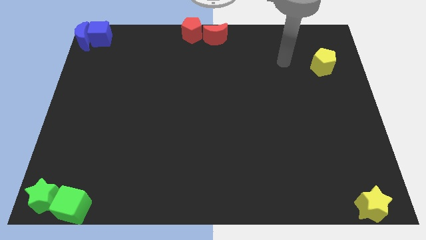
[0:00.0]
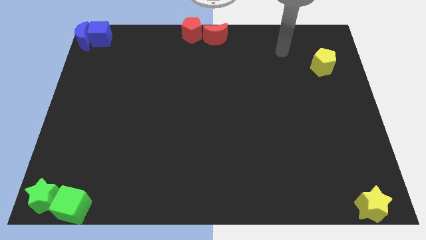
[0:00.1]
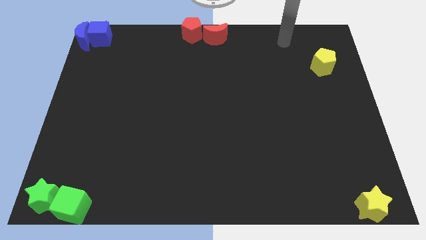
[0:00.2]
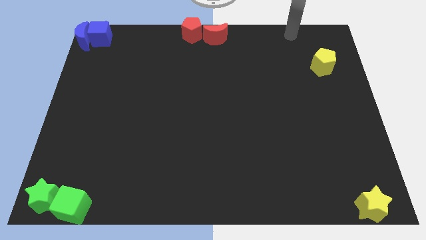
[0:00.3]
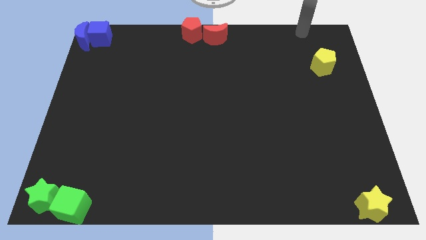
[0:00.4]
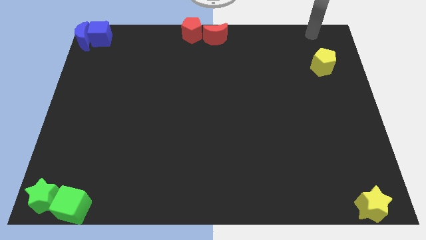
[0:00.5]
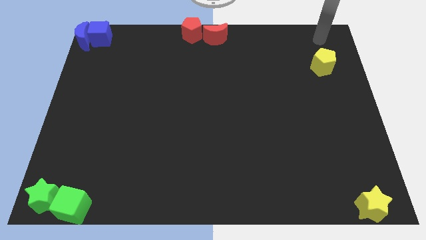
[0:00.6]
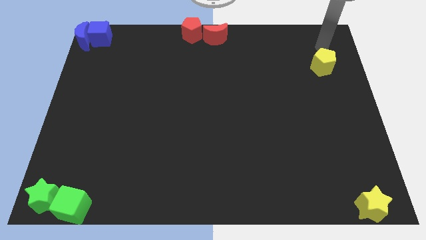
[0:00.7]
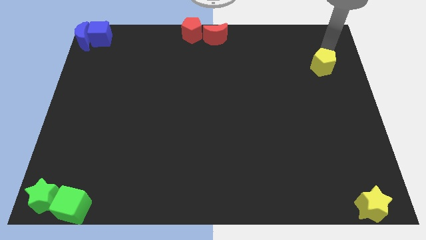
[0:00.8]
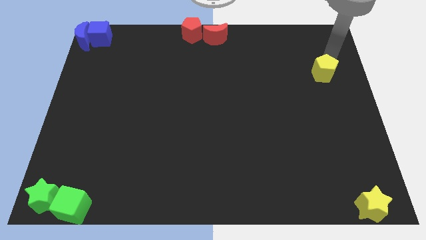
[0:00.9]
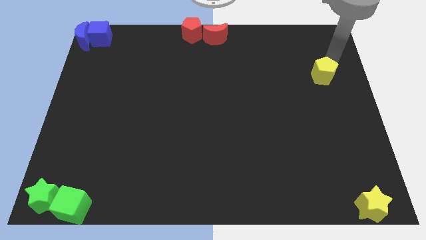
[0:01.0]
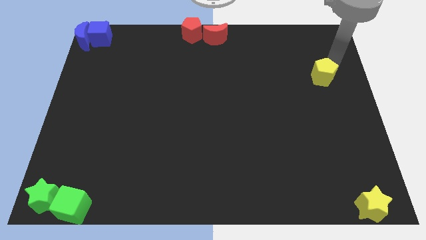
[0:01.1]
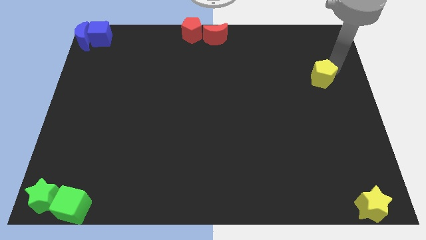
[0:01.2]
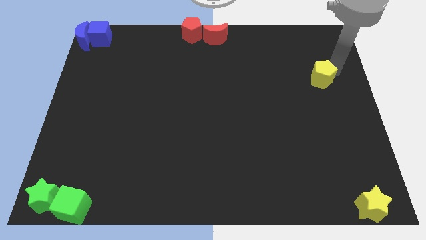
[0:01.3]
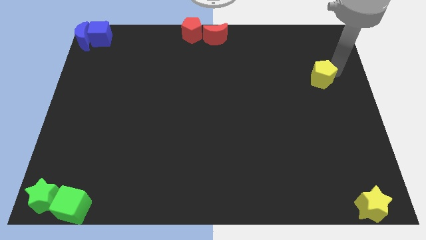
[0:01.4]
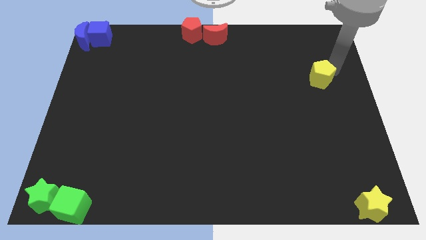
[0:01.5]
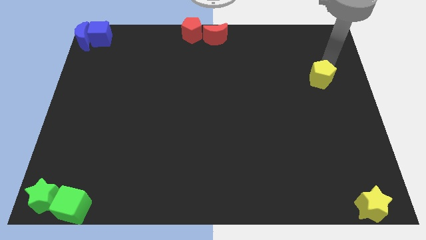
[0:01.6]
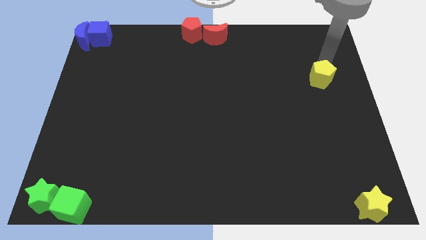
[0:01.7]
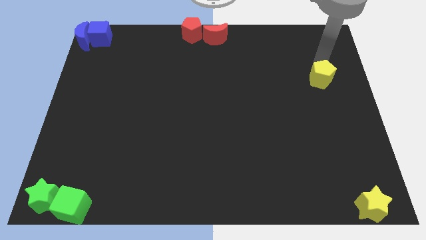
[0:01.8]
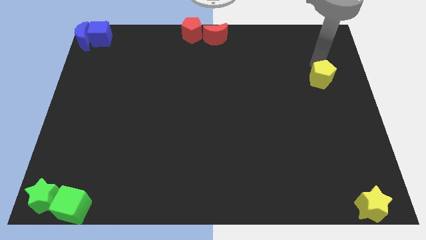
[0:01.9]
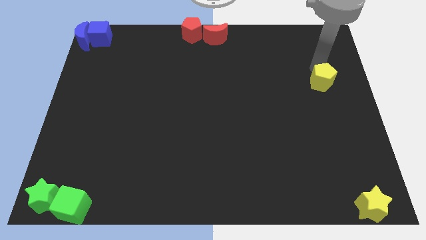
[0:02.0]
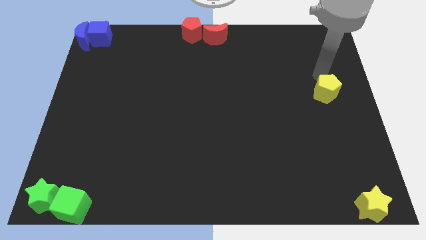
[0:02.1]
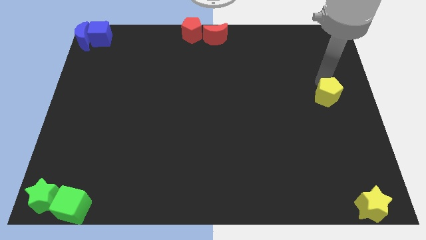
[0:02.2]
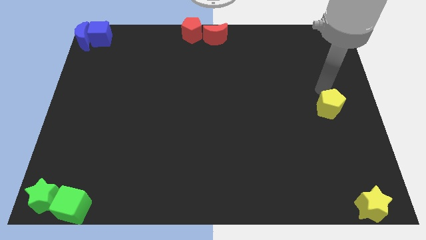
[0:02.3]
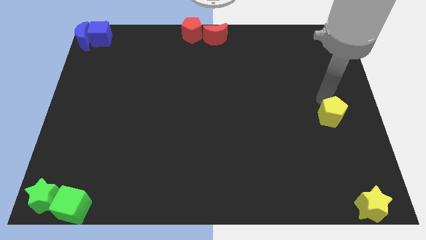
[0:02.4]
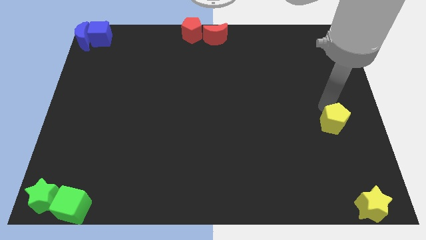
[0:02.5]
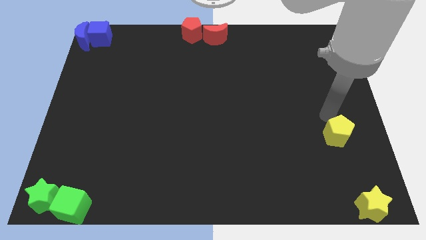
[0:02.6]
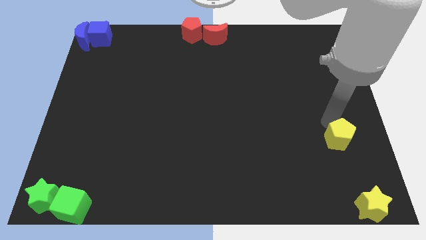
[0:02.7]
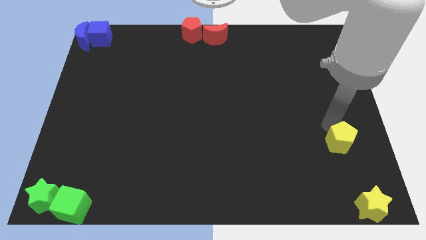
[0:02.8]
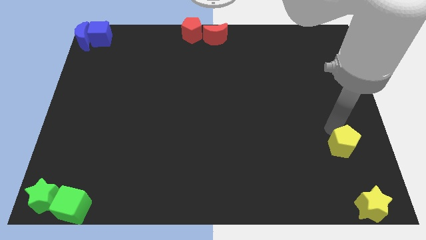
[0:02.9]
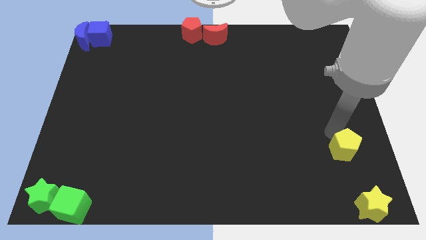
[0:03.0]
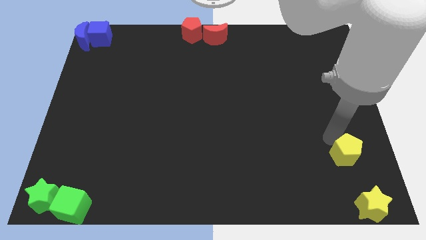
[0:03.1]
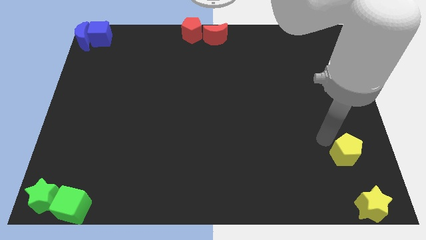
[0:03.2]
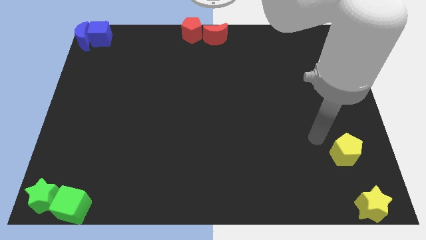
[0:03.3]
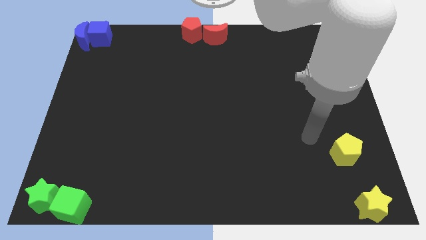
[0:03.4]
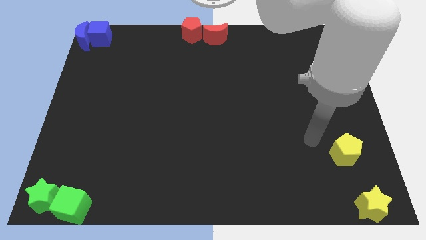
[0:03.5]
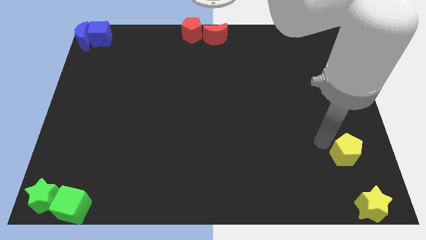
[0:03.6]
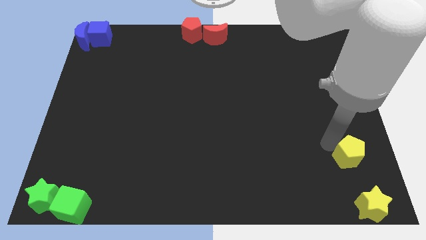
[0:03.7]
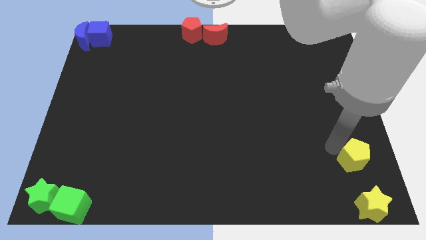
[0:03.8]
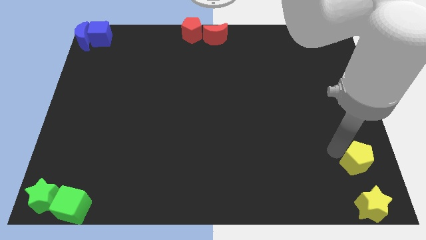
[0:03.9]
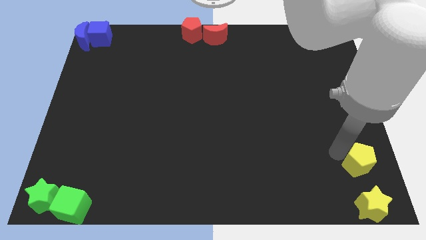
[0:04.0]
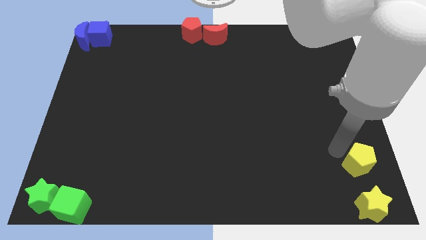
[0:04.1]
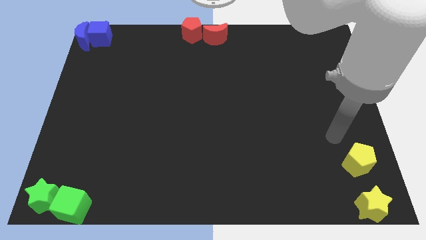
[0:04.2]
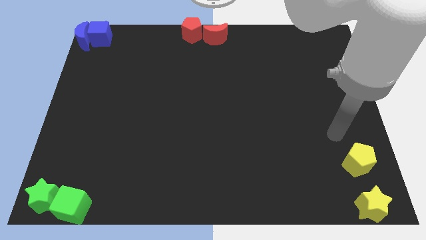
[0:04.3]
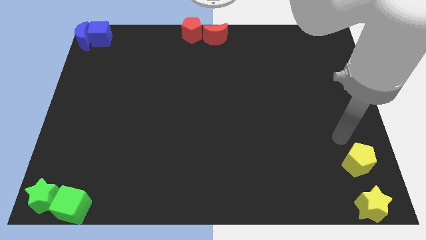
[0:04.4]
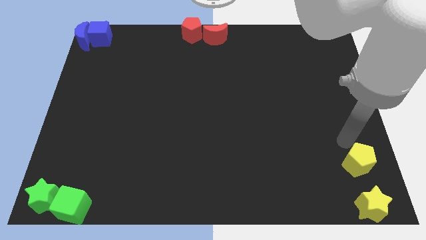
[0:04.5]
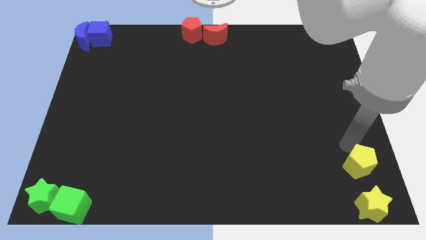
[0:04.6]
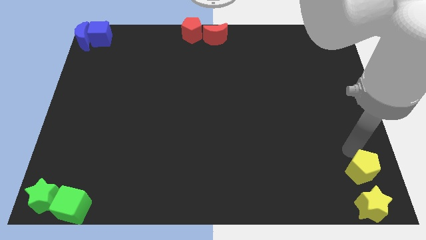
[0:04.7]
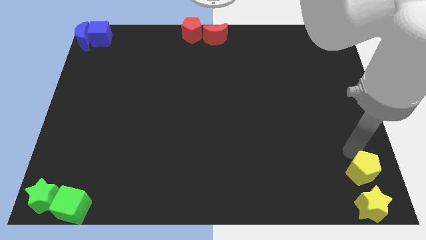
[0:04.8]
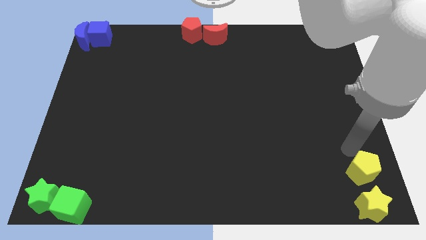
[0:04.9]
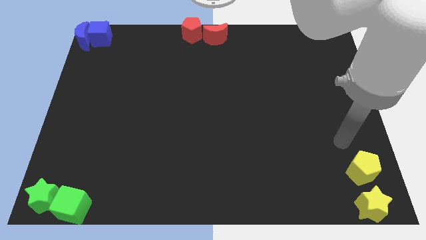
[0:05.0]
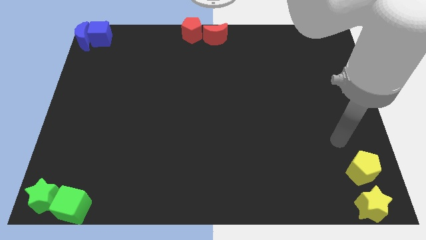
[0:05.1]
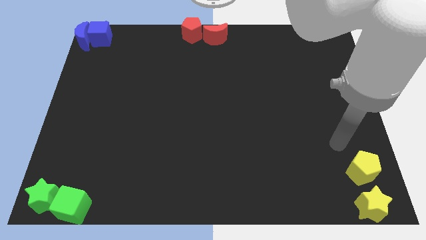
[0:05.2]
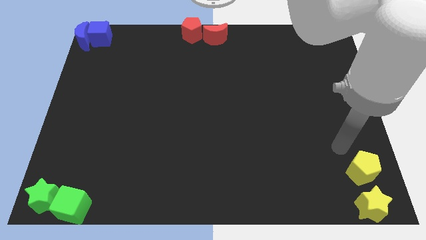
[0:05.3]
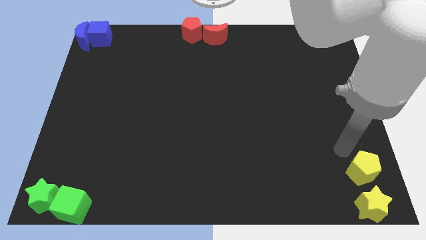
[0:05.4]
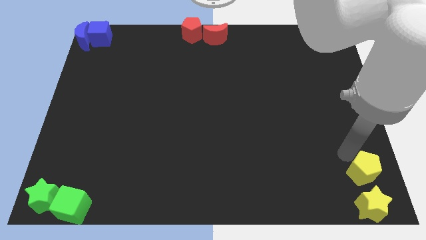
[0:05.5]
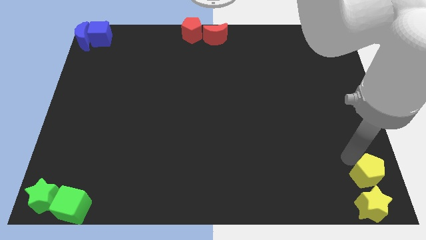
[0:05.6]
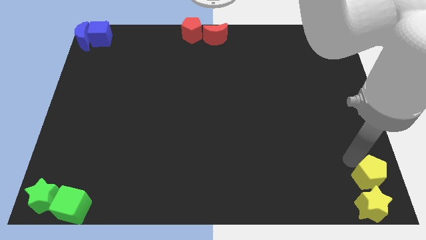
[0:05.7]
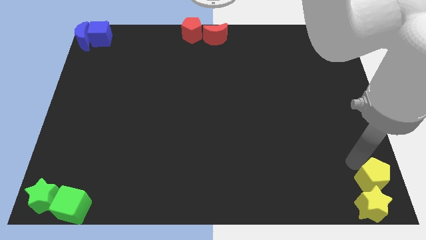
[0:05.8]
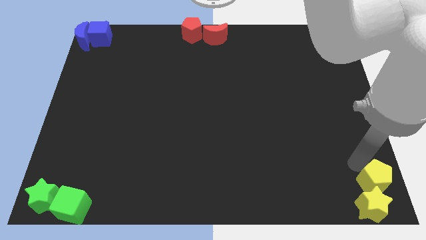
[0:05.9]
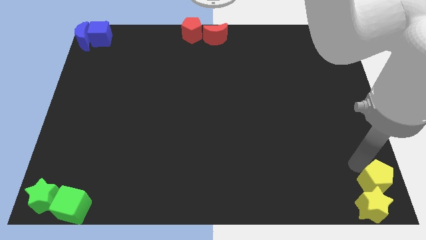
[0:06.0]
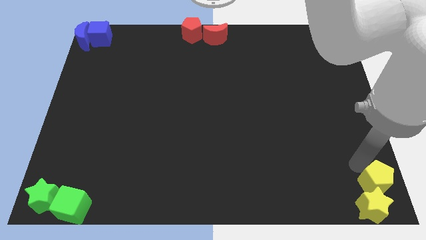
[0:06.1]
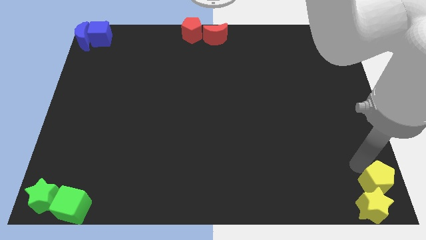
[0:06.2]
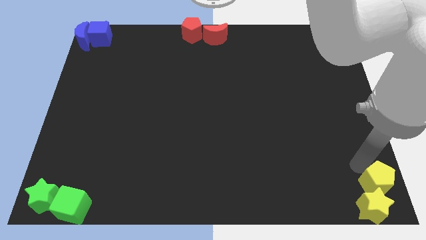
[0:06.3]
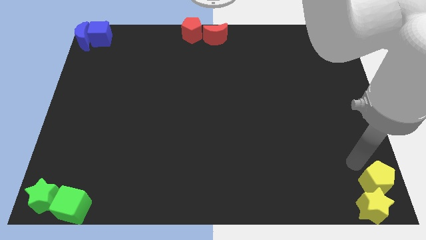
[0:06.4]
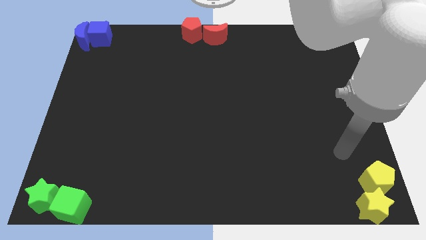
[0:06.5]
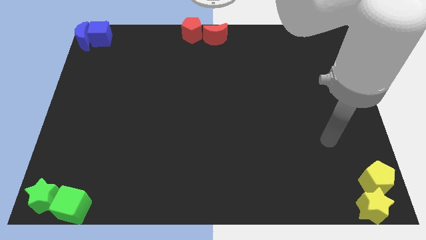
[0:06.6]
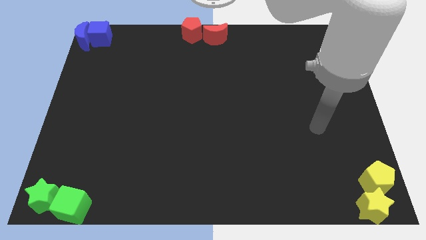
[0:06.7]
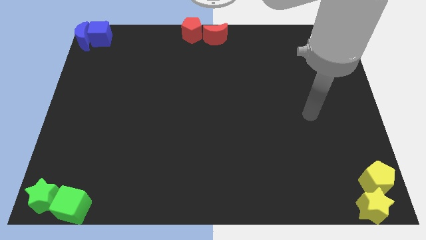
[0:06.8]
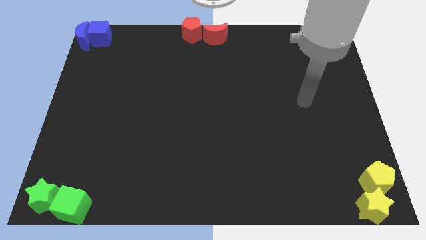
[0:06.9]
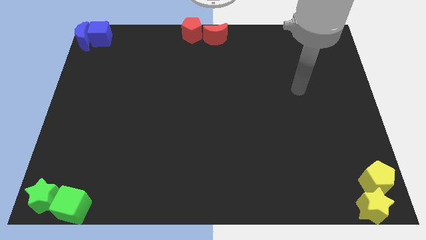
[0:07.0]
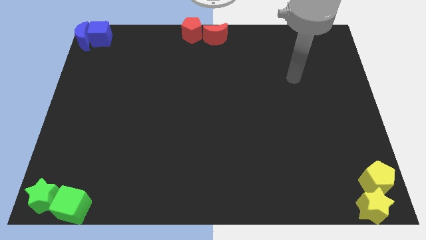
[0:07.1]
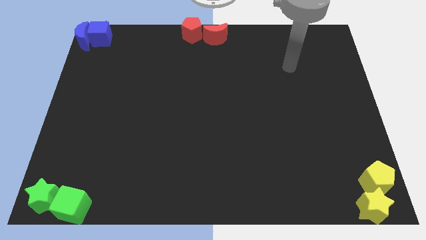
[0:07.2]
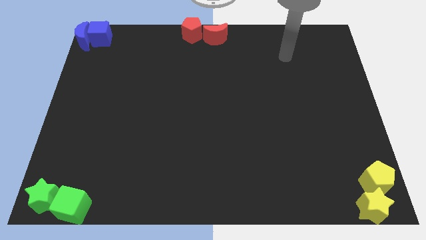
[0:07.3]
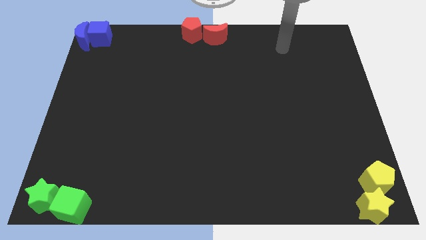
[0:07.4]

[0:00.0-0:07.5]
move the yellow pentagon above the yellow star

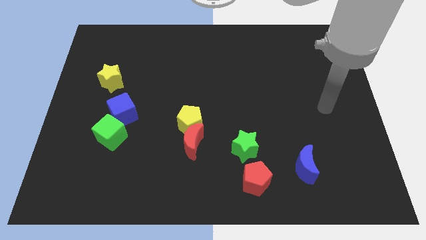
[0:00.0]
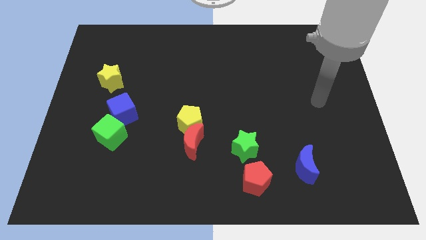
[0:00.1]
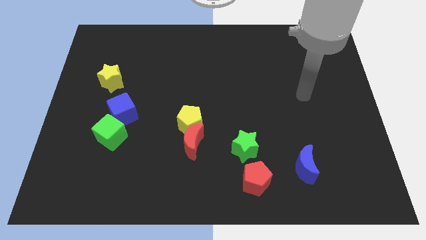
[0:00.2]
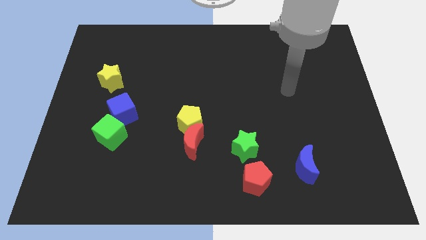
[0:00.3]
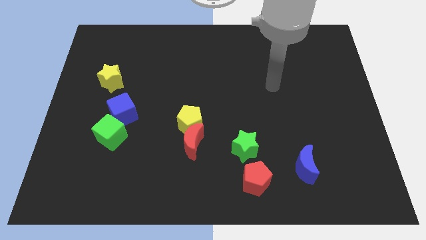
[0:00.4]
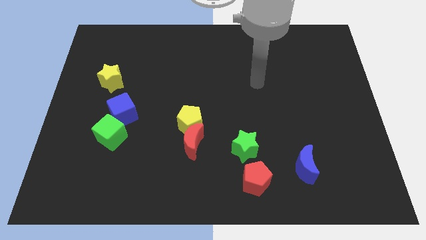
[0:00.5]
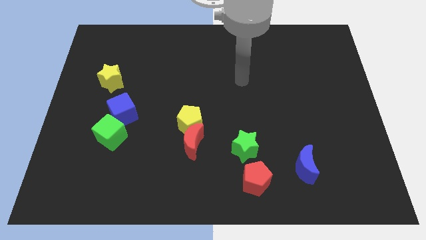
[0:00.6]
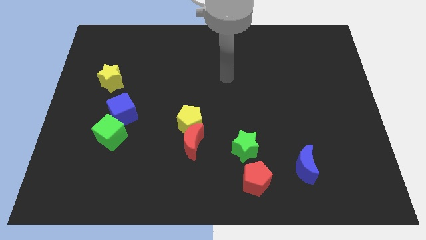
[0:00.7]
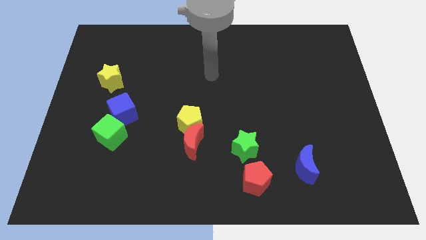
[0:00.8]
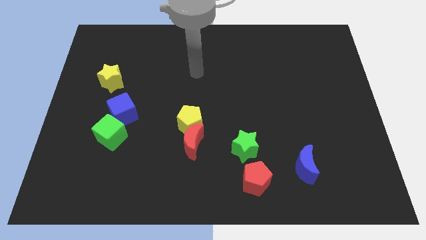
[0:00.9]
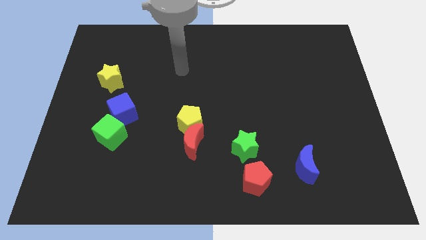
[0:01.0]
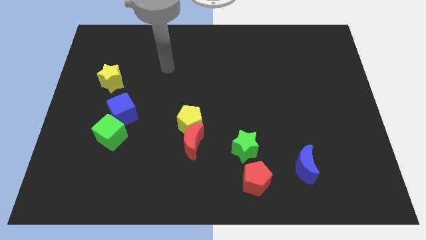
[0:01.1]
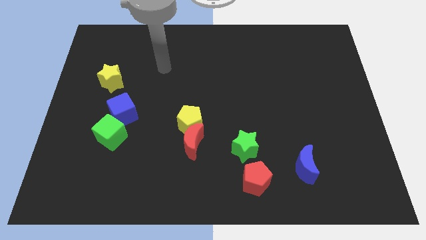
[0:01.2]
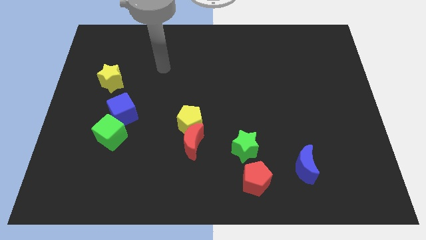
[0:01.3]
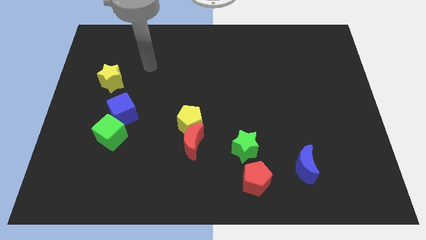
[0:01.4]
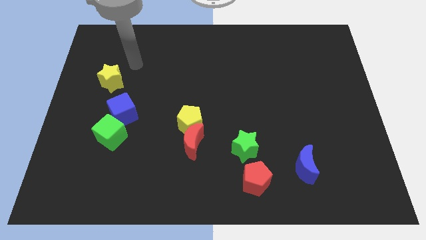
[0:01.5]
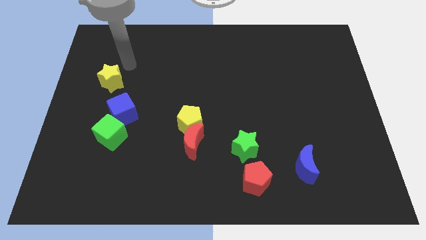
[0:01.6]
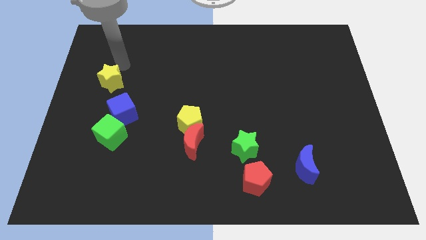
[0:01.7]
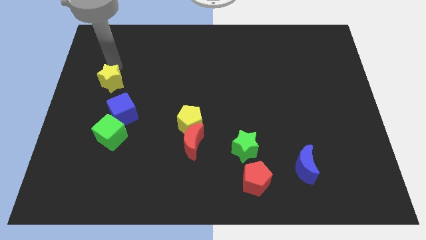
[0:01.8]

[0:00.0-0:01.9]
point your arm at the top of the yellow star
